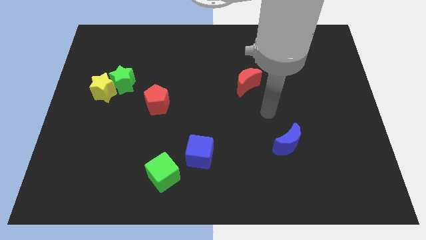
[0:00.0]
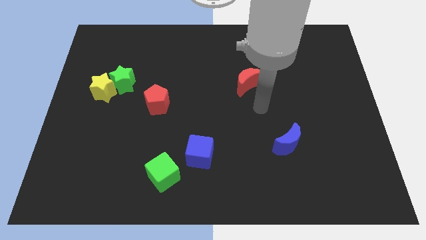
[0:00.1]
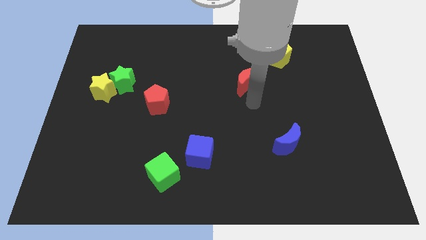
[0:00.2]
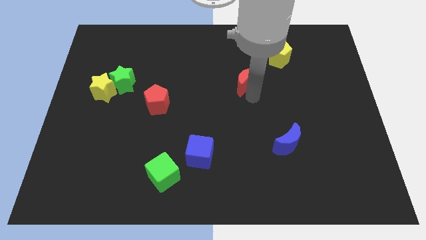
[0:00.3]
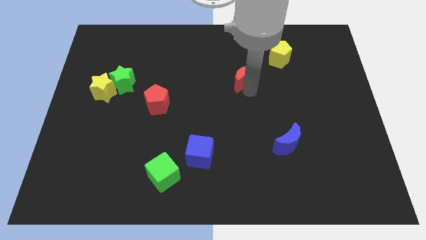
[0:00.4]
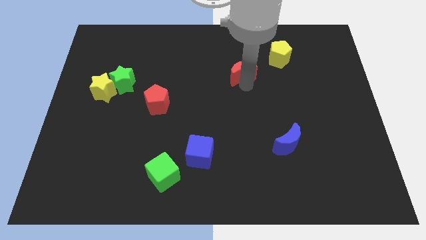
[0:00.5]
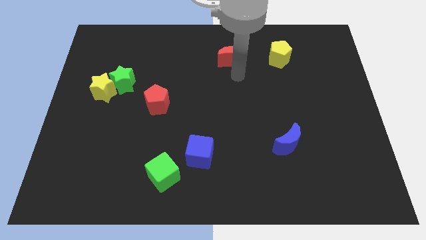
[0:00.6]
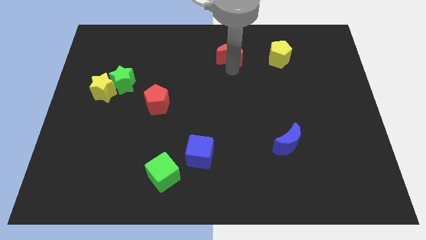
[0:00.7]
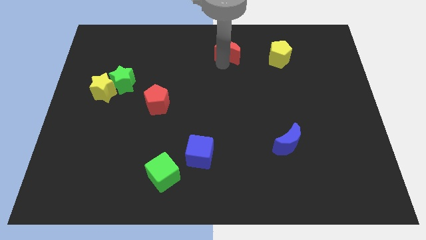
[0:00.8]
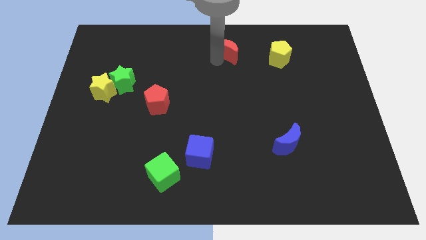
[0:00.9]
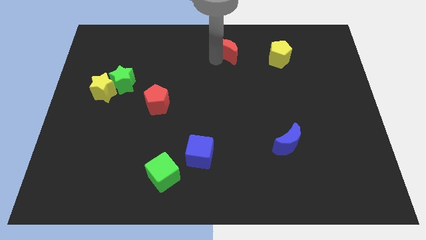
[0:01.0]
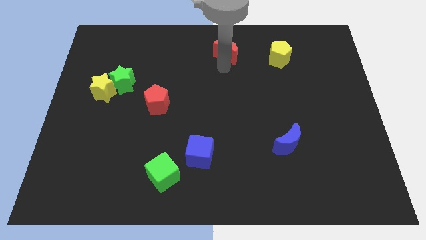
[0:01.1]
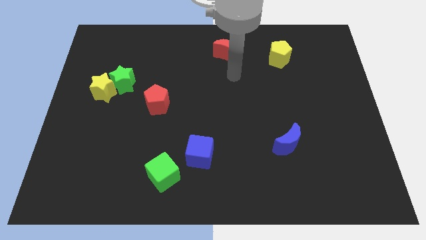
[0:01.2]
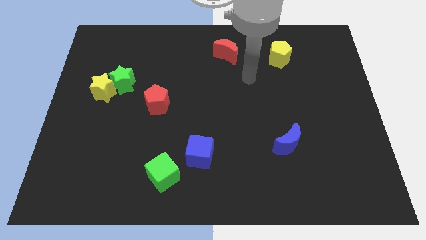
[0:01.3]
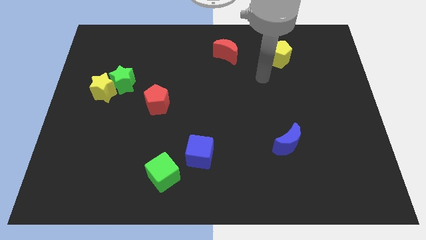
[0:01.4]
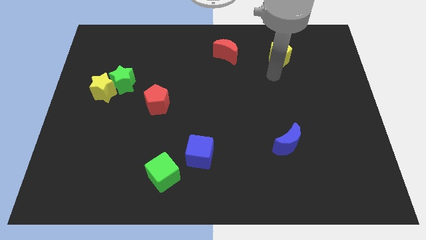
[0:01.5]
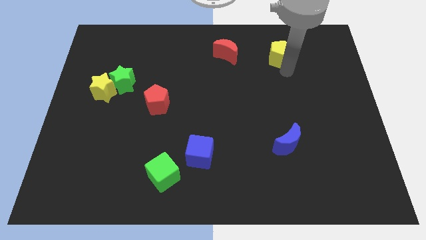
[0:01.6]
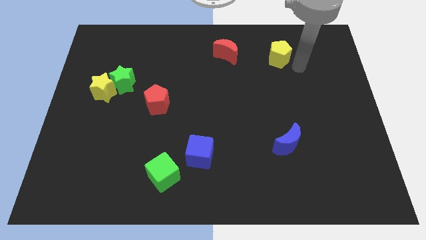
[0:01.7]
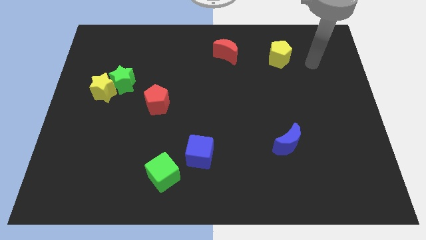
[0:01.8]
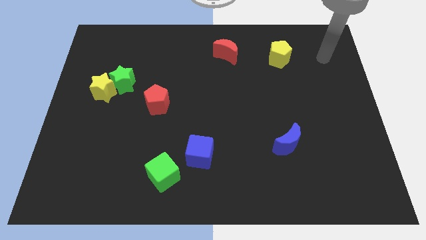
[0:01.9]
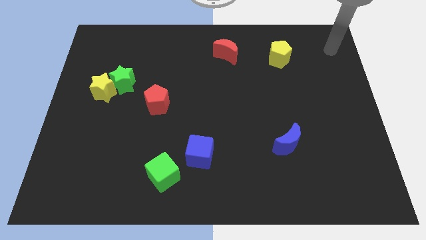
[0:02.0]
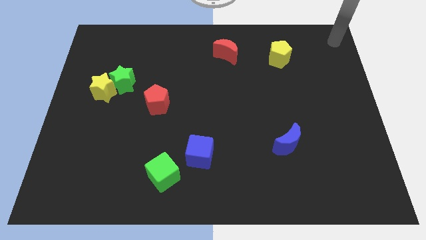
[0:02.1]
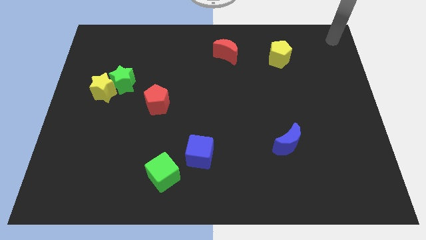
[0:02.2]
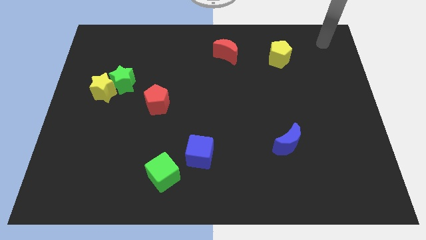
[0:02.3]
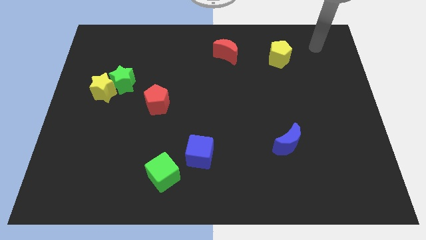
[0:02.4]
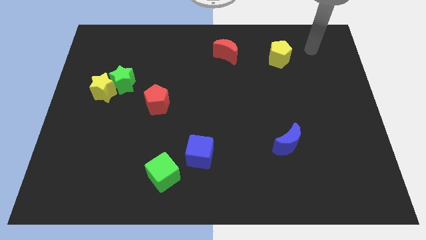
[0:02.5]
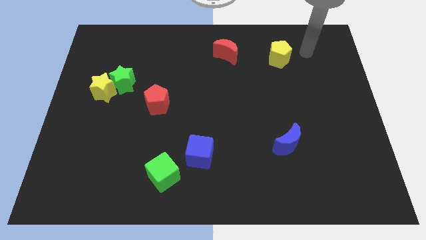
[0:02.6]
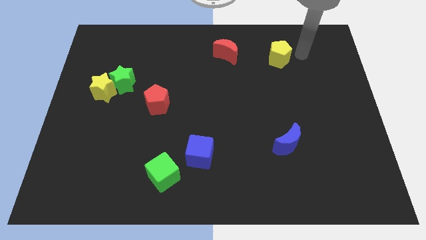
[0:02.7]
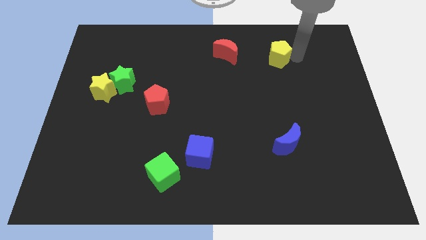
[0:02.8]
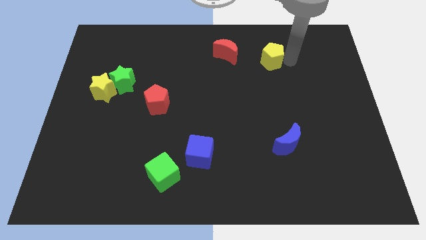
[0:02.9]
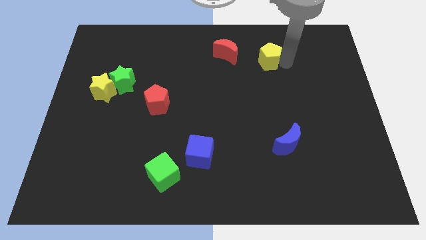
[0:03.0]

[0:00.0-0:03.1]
push red crescent to the top center of the board

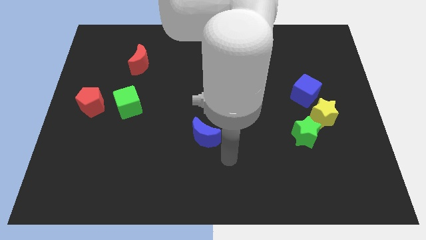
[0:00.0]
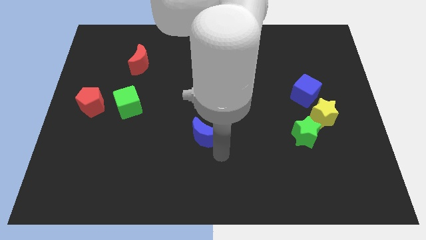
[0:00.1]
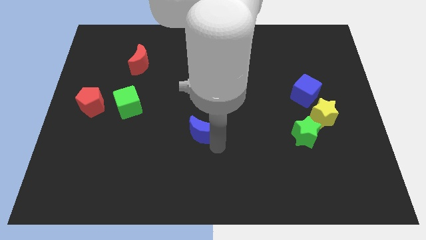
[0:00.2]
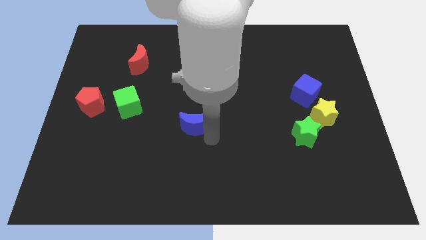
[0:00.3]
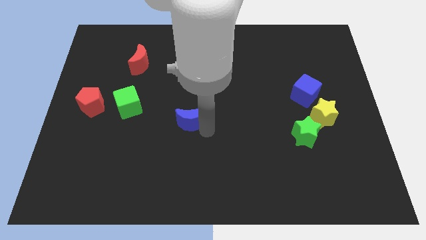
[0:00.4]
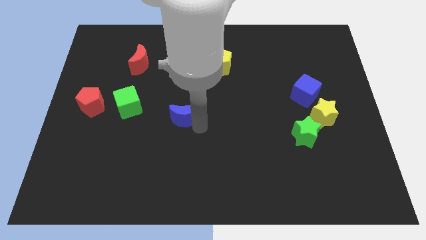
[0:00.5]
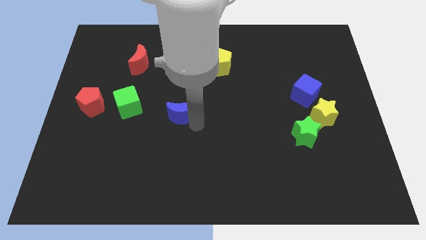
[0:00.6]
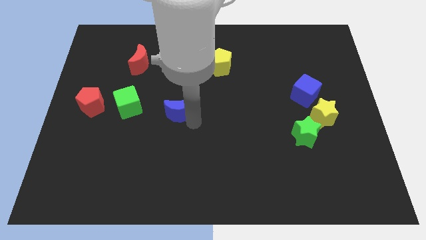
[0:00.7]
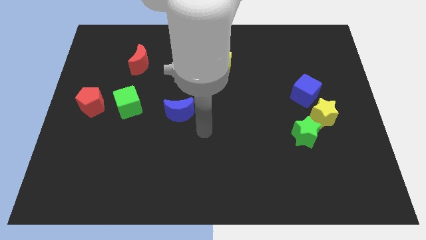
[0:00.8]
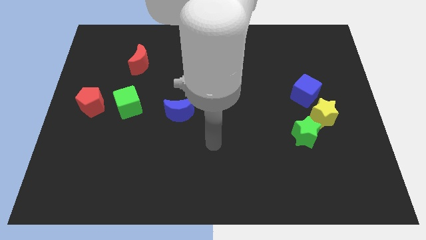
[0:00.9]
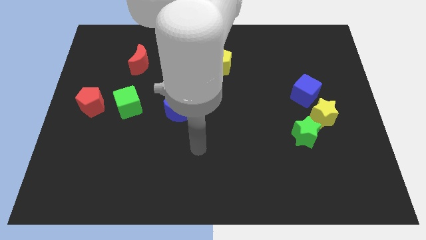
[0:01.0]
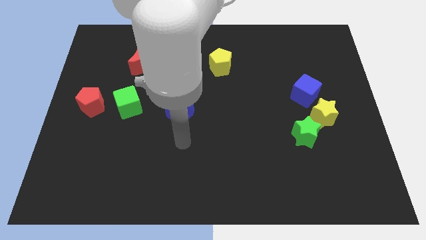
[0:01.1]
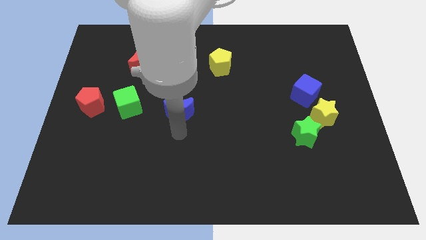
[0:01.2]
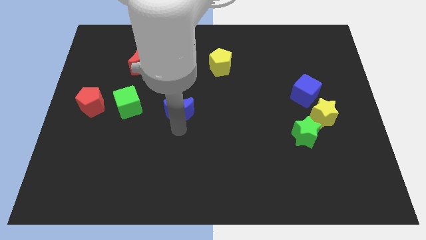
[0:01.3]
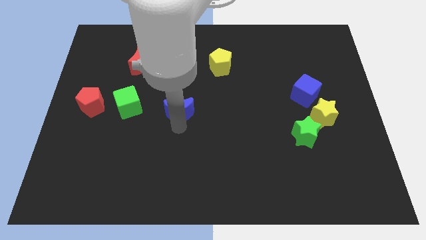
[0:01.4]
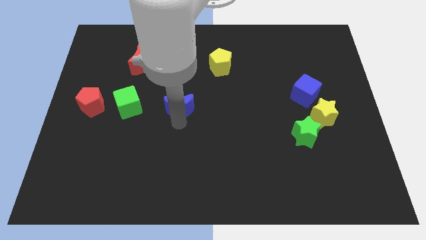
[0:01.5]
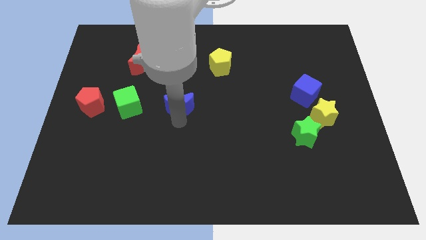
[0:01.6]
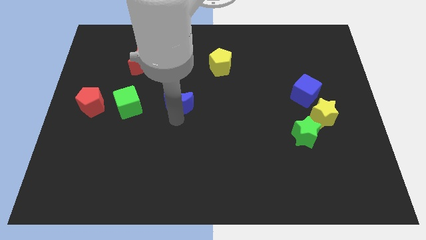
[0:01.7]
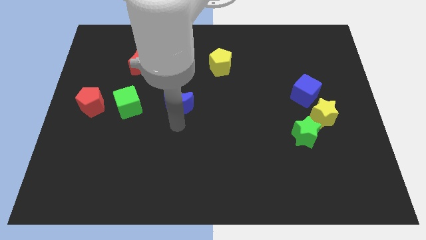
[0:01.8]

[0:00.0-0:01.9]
move the blue crescent to the right of green cube

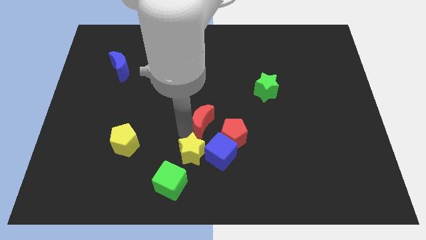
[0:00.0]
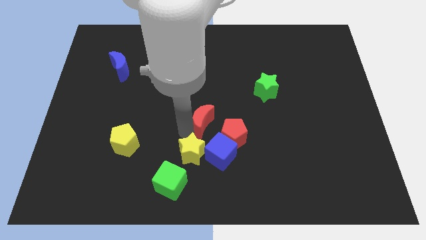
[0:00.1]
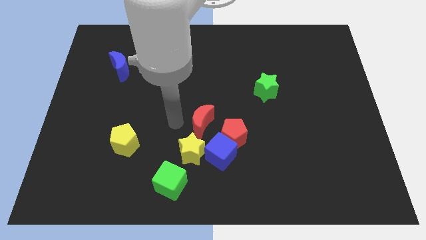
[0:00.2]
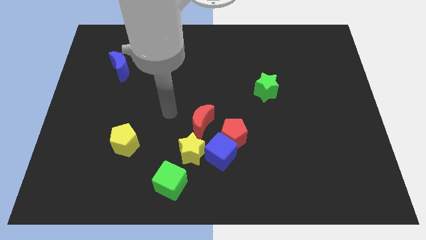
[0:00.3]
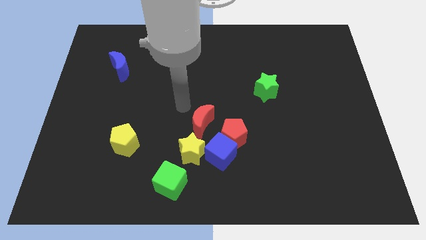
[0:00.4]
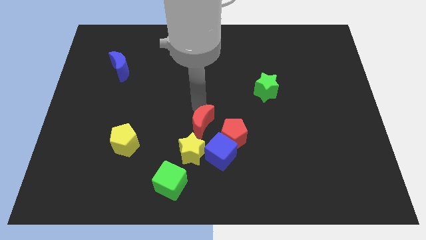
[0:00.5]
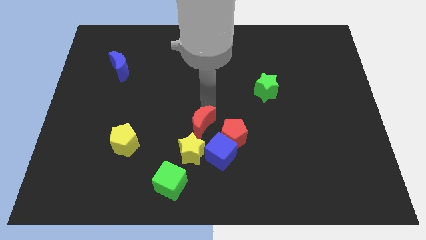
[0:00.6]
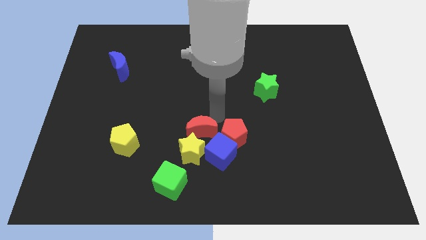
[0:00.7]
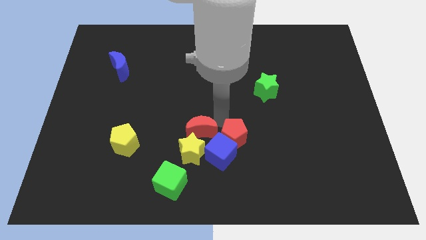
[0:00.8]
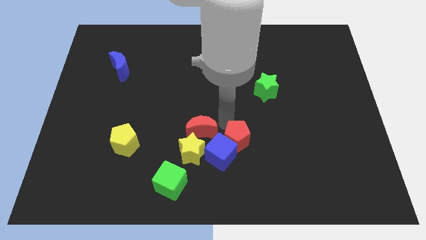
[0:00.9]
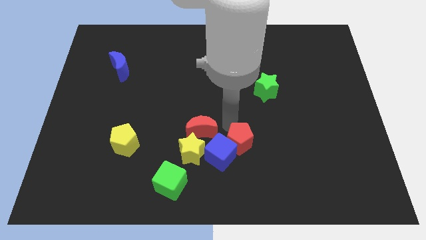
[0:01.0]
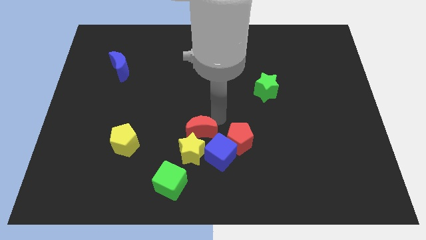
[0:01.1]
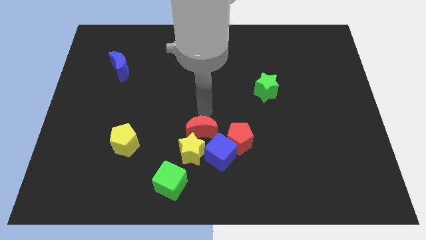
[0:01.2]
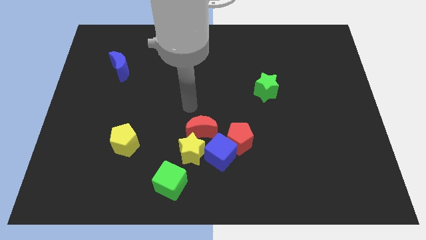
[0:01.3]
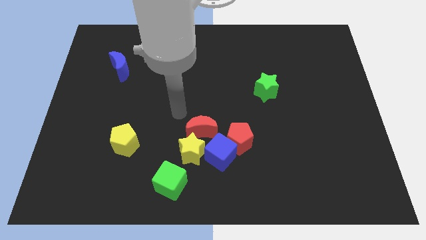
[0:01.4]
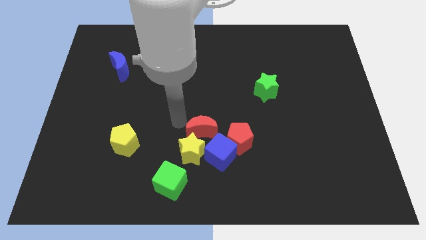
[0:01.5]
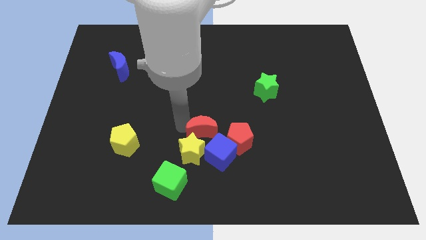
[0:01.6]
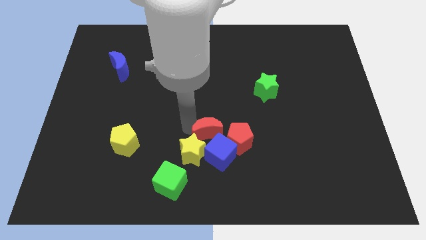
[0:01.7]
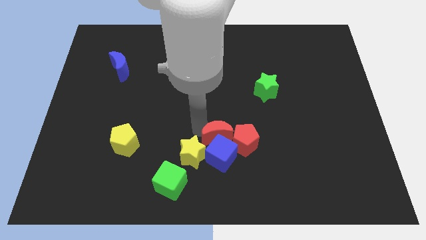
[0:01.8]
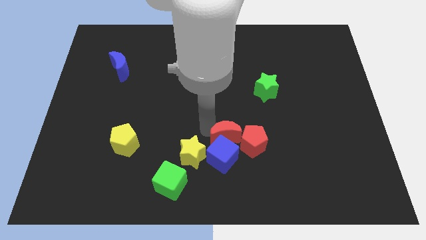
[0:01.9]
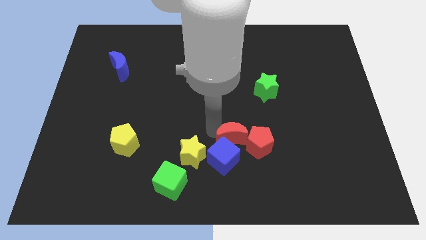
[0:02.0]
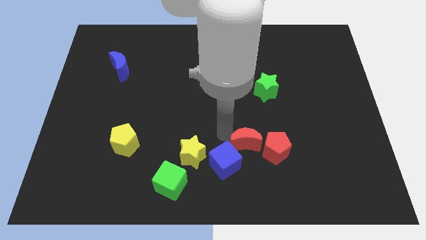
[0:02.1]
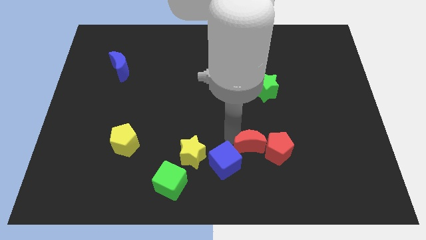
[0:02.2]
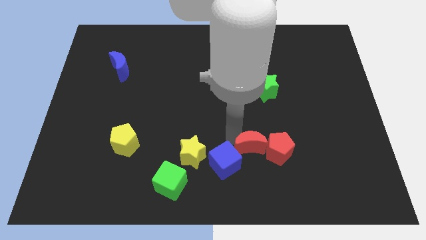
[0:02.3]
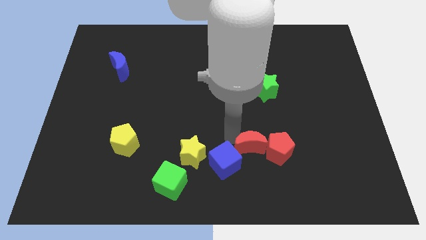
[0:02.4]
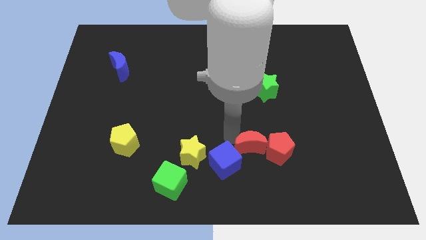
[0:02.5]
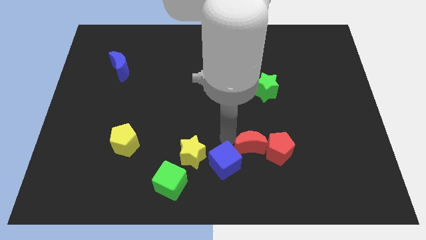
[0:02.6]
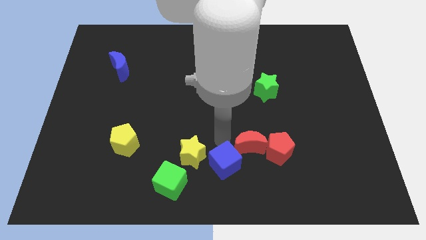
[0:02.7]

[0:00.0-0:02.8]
push the red crescent towards the right side of blue cube

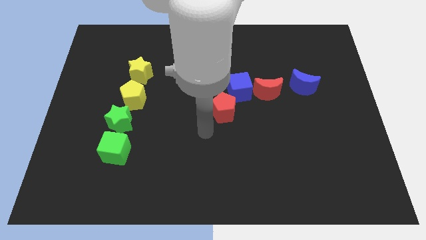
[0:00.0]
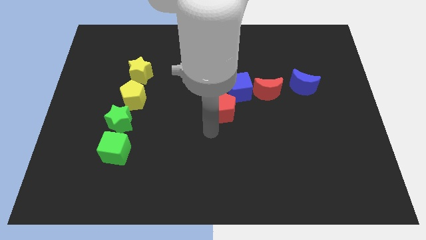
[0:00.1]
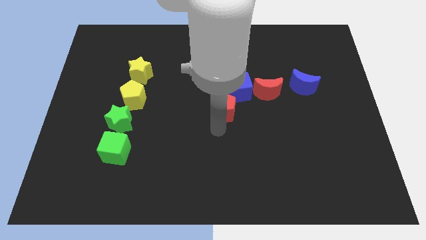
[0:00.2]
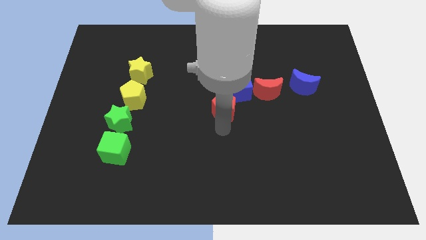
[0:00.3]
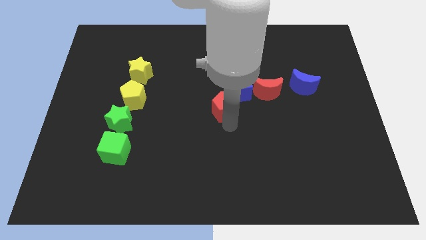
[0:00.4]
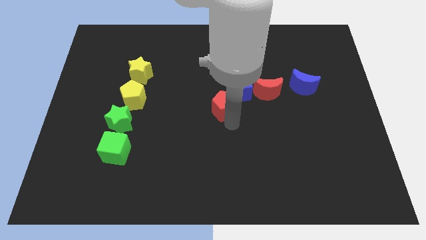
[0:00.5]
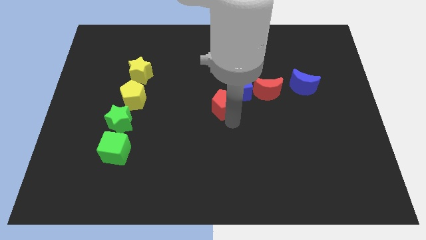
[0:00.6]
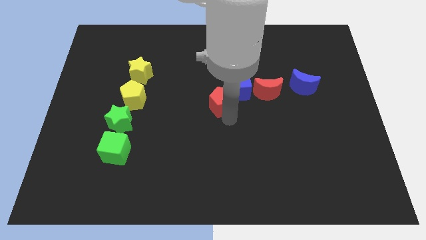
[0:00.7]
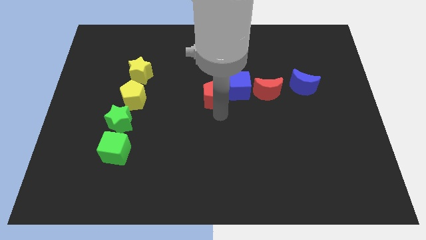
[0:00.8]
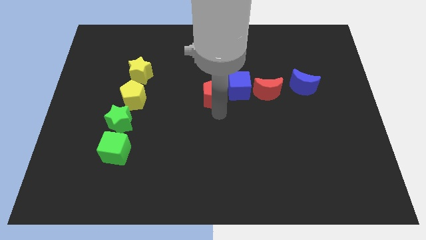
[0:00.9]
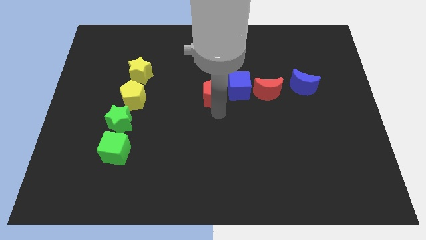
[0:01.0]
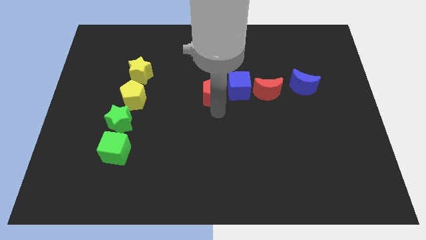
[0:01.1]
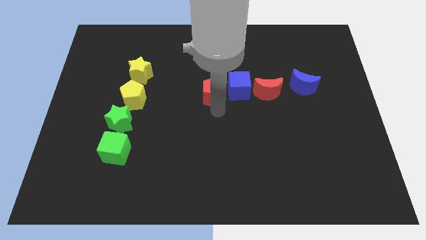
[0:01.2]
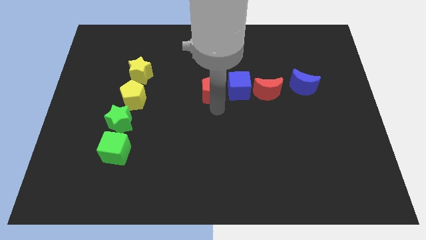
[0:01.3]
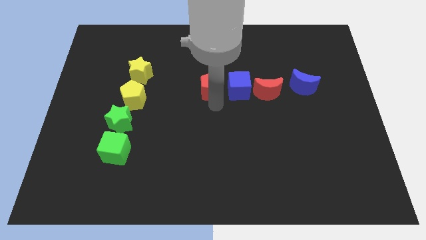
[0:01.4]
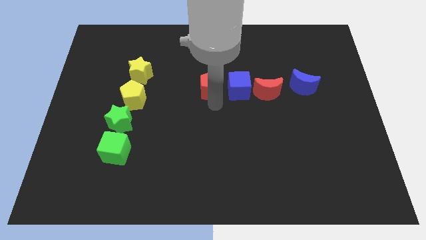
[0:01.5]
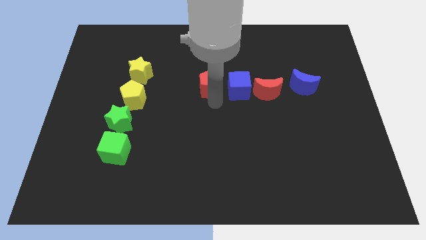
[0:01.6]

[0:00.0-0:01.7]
place the red pentagon to the left of the blue cube
